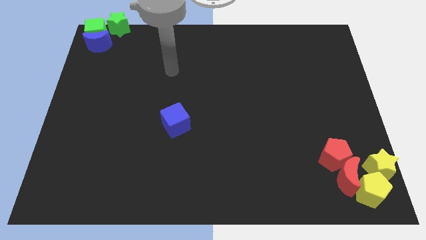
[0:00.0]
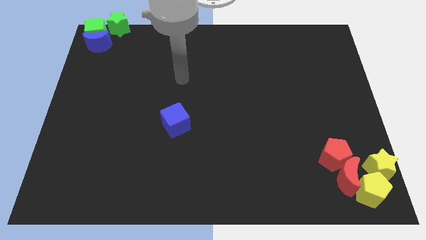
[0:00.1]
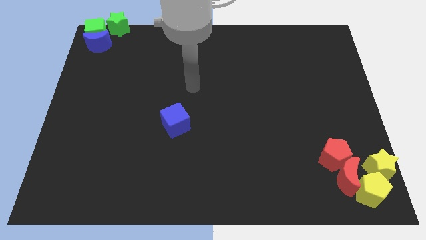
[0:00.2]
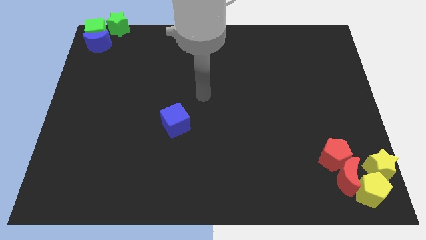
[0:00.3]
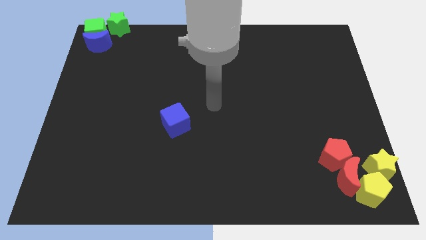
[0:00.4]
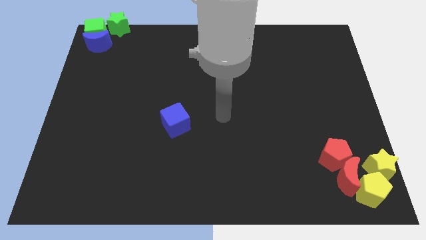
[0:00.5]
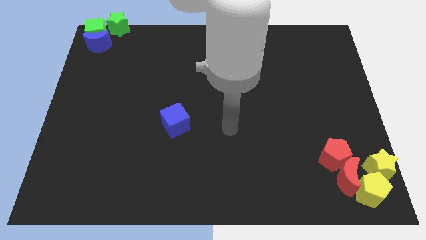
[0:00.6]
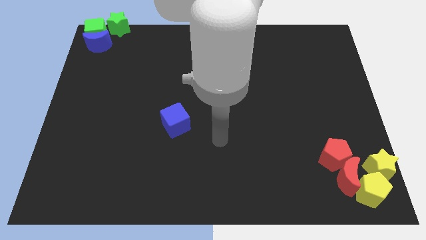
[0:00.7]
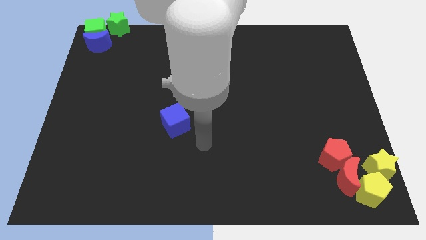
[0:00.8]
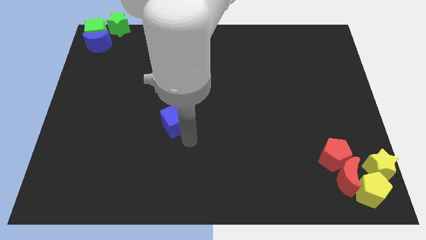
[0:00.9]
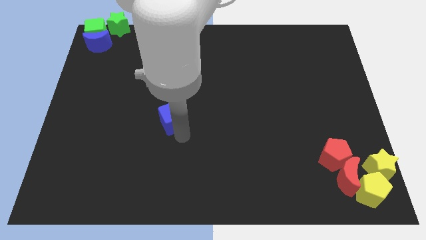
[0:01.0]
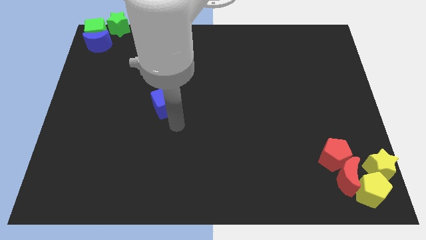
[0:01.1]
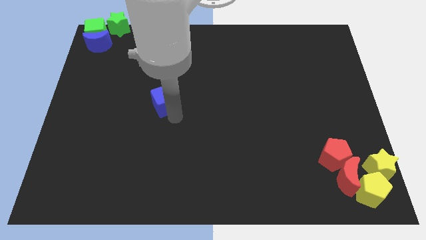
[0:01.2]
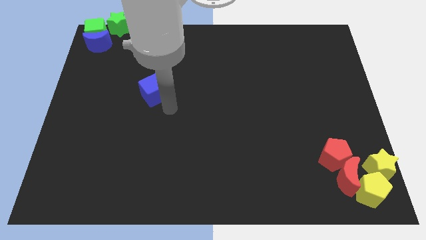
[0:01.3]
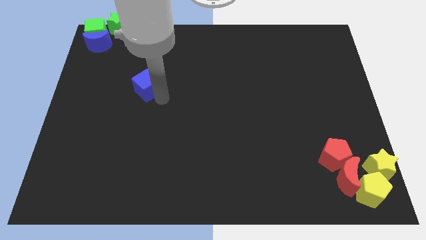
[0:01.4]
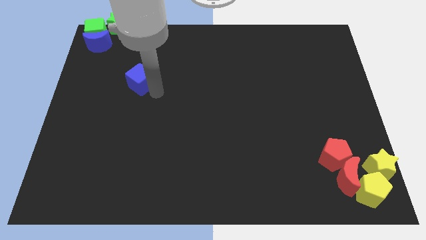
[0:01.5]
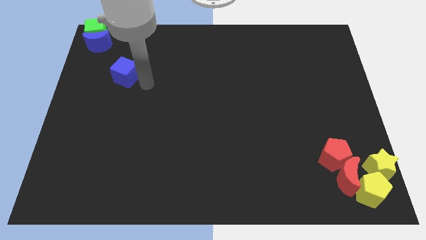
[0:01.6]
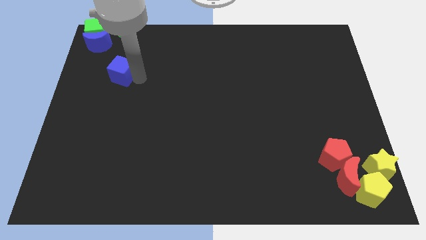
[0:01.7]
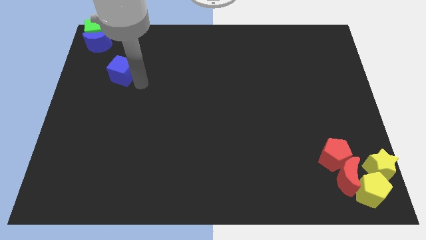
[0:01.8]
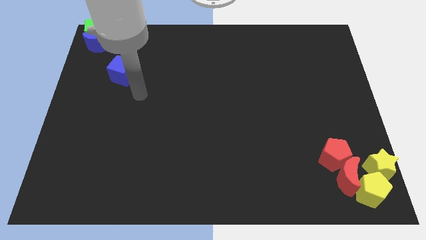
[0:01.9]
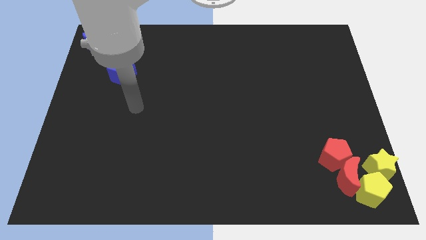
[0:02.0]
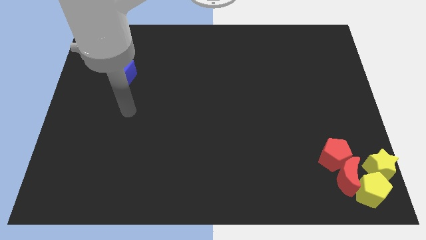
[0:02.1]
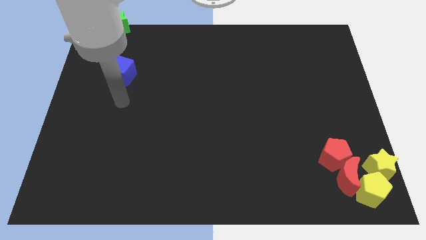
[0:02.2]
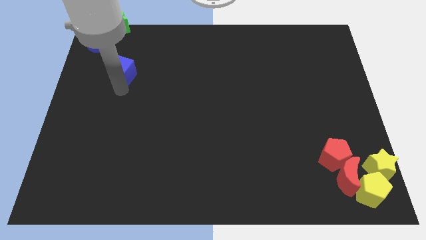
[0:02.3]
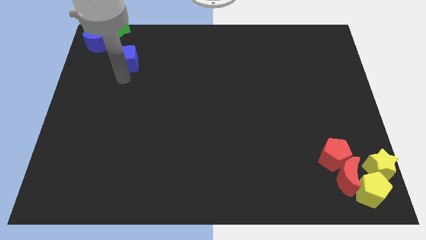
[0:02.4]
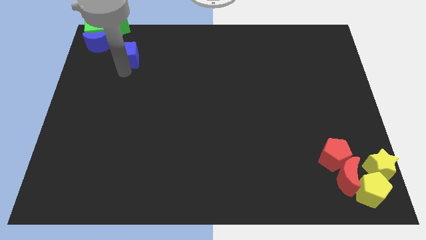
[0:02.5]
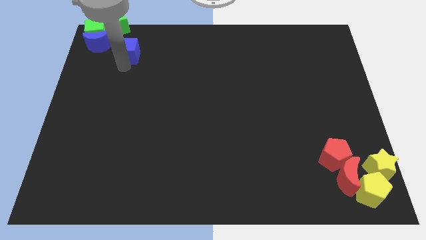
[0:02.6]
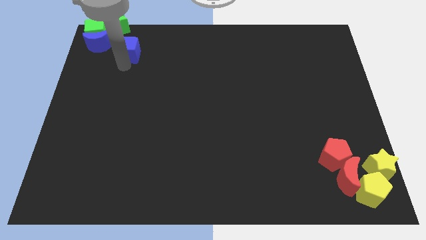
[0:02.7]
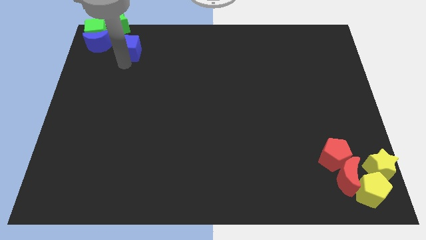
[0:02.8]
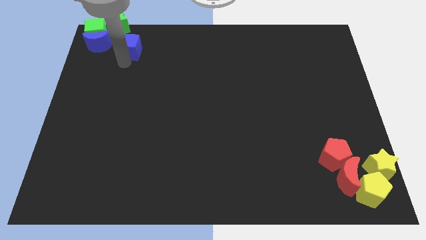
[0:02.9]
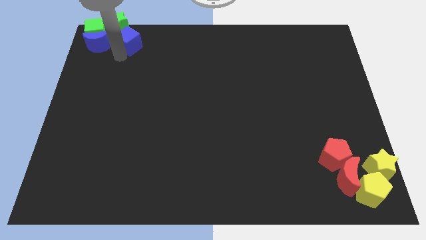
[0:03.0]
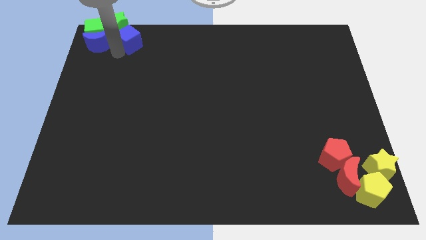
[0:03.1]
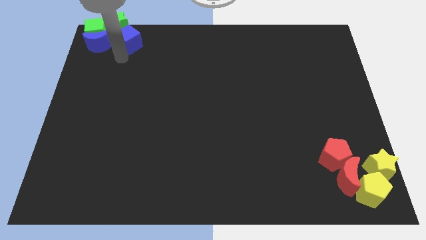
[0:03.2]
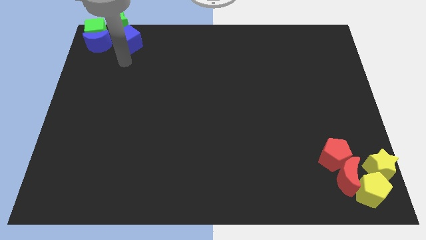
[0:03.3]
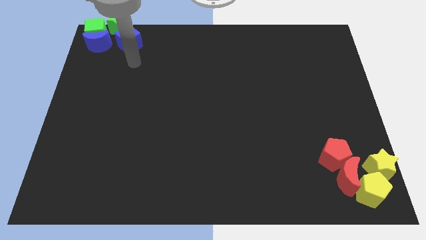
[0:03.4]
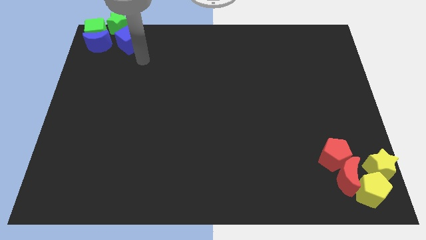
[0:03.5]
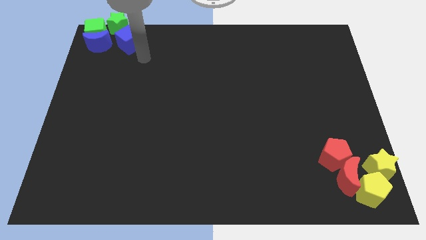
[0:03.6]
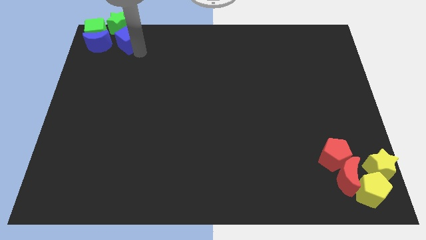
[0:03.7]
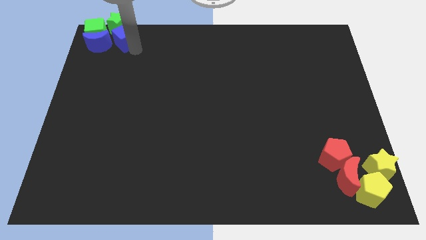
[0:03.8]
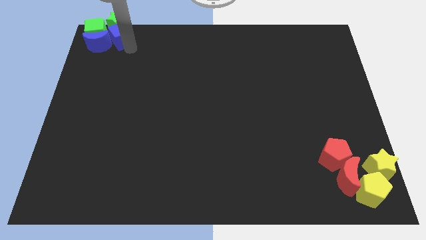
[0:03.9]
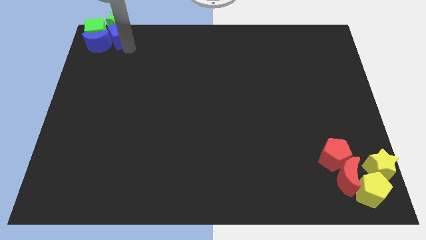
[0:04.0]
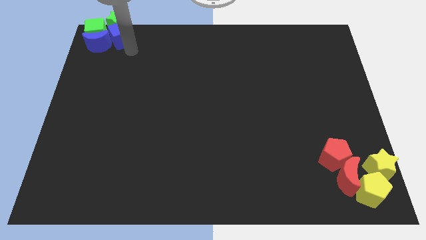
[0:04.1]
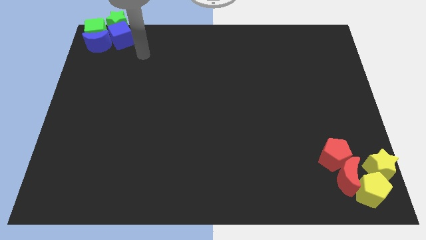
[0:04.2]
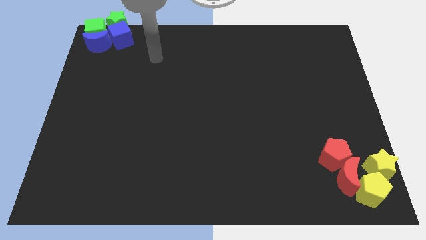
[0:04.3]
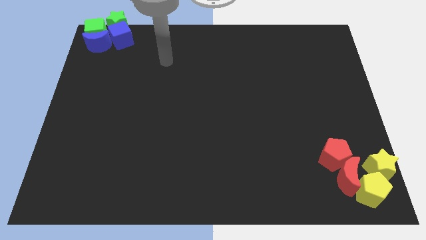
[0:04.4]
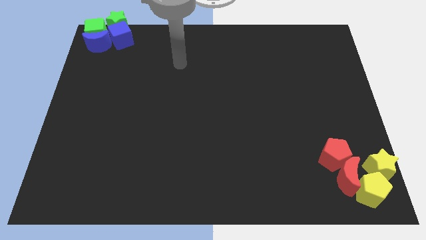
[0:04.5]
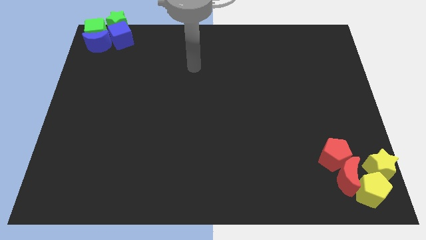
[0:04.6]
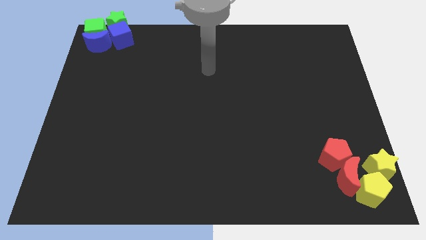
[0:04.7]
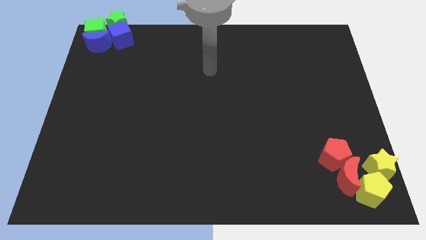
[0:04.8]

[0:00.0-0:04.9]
drag the blue cube towards the group of the blocks

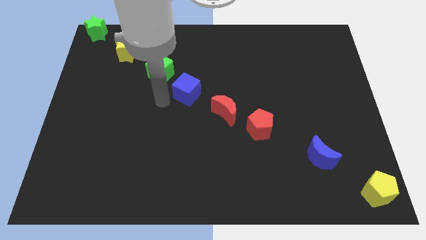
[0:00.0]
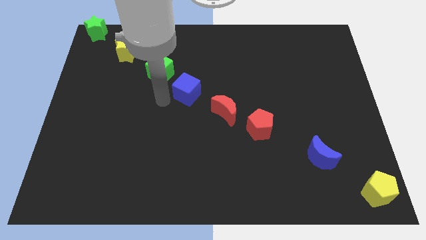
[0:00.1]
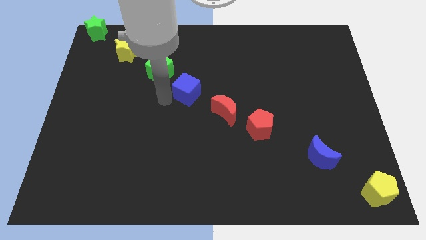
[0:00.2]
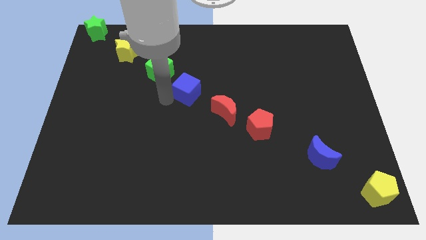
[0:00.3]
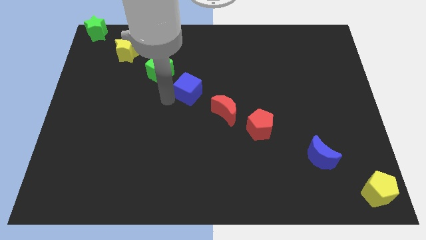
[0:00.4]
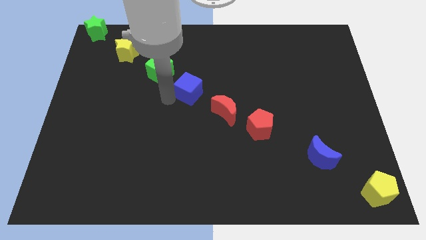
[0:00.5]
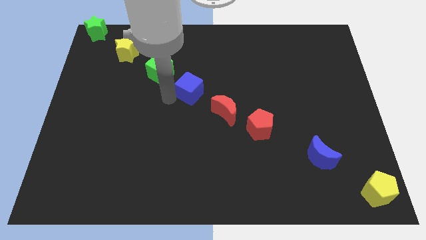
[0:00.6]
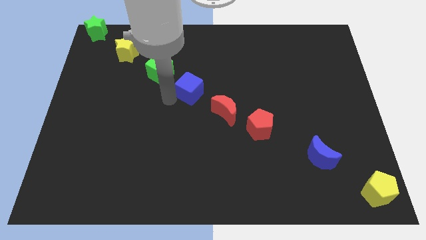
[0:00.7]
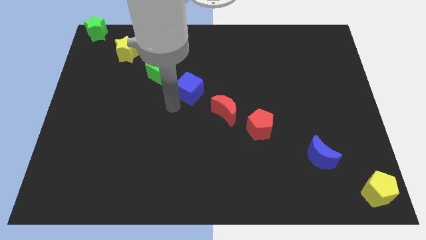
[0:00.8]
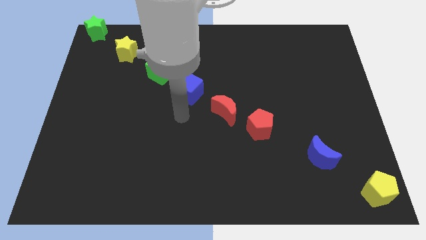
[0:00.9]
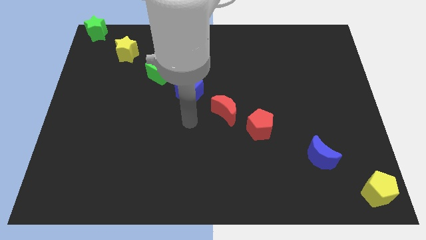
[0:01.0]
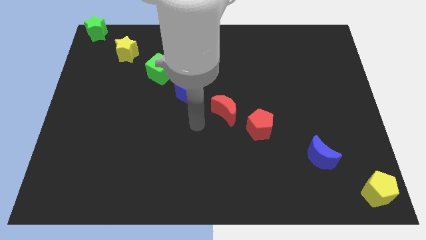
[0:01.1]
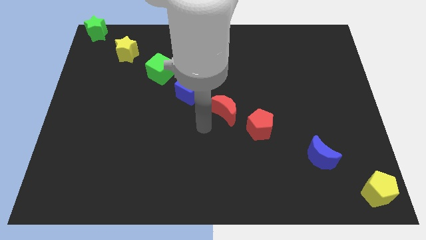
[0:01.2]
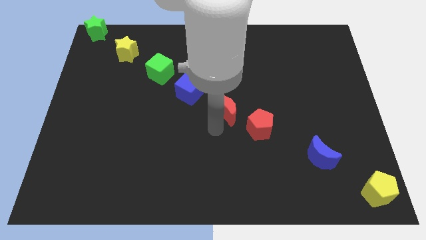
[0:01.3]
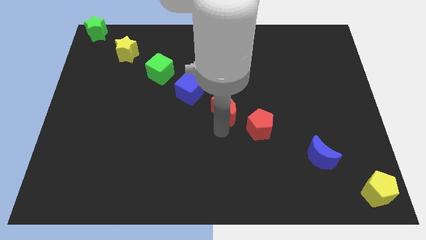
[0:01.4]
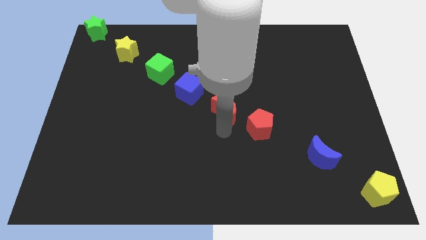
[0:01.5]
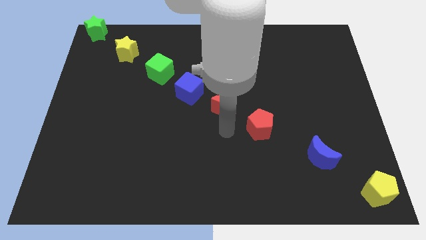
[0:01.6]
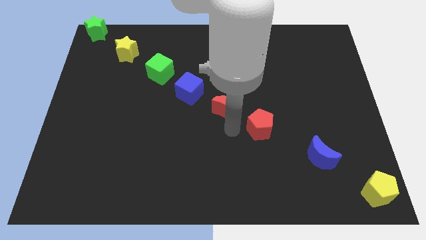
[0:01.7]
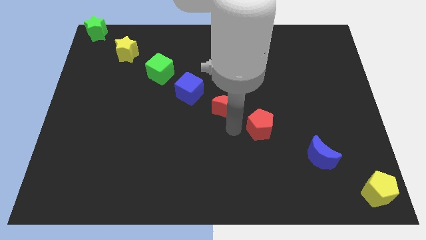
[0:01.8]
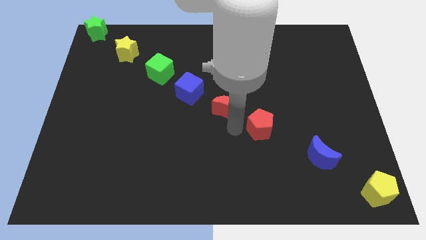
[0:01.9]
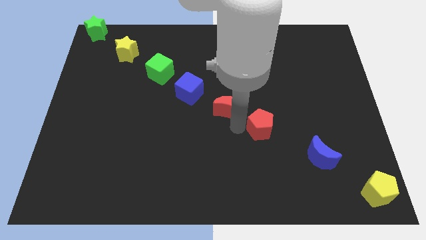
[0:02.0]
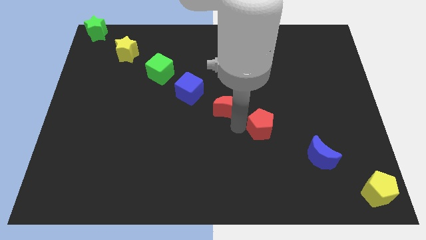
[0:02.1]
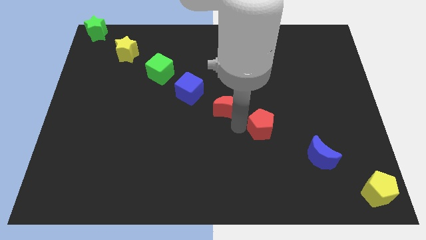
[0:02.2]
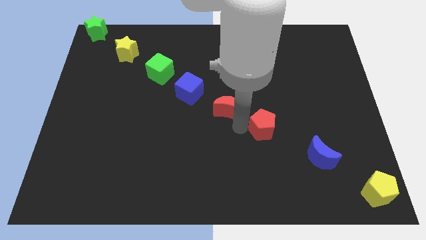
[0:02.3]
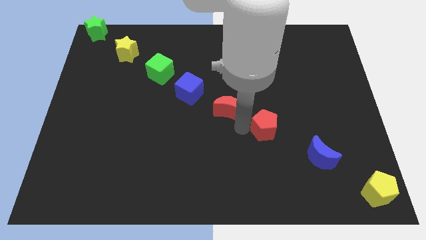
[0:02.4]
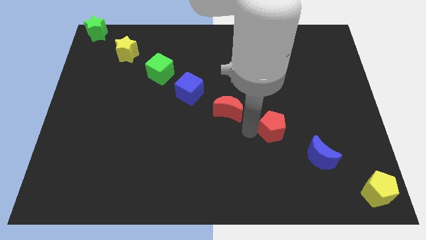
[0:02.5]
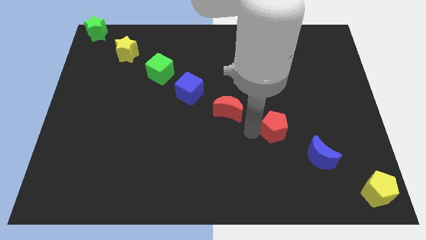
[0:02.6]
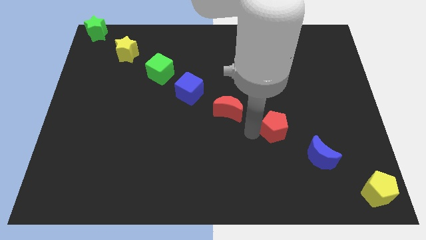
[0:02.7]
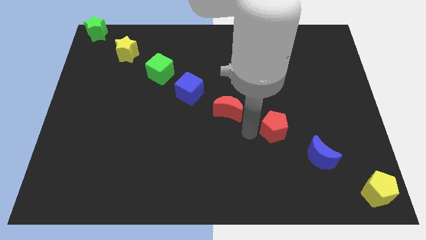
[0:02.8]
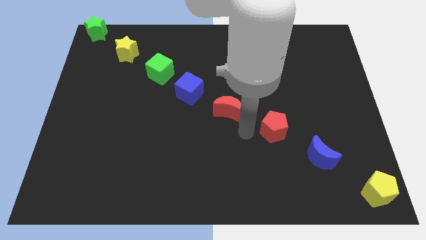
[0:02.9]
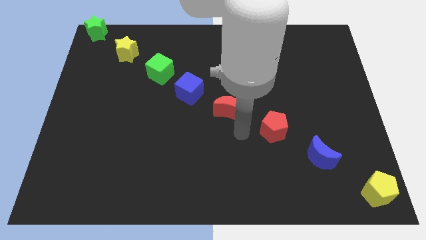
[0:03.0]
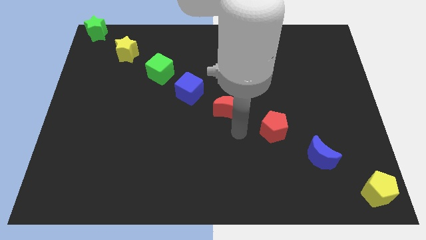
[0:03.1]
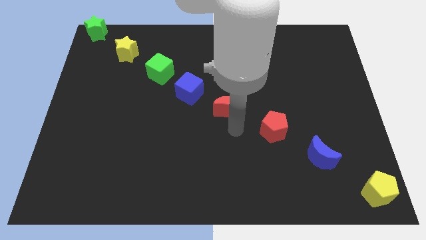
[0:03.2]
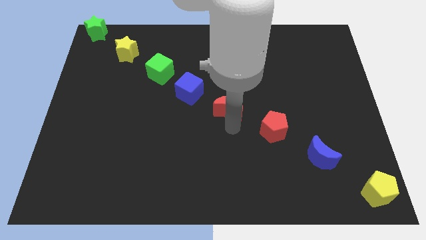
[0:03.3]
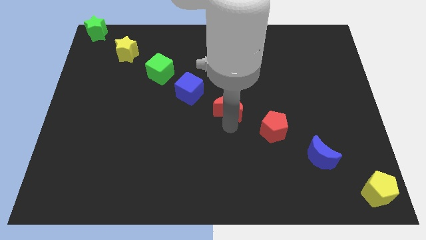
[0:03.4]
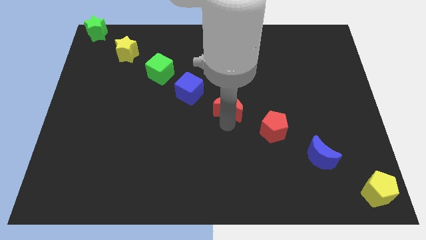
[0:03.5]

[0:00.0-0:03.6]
move the blue cube red crescent red pentagon slightly towards top side

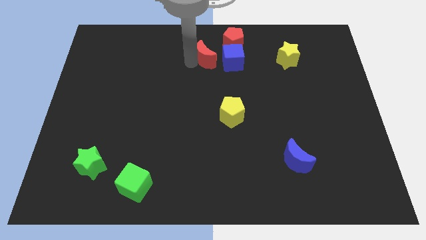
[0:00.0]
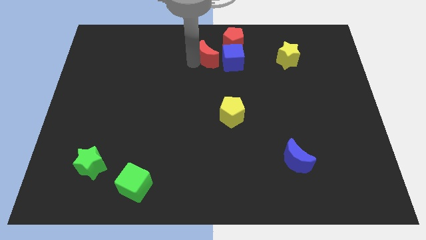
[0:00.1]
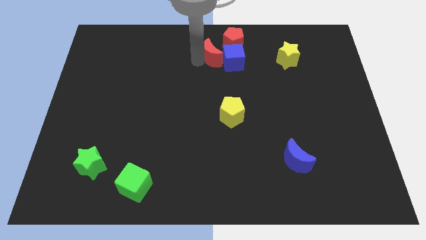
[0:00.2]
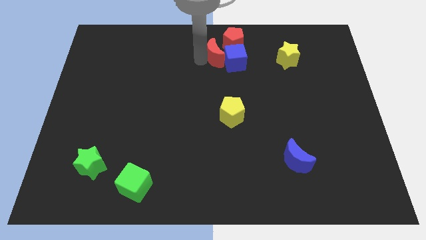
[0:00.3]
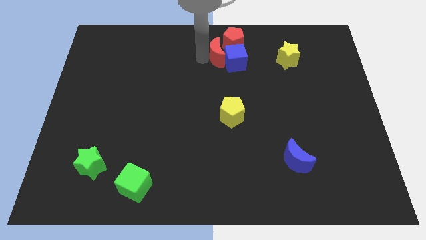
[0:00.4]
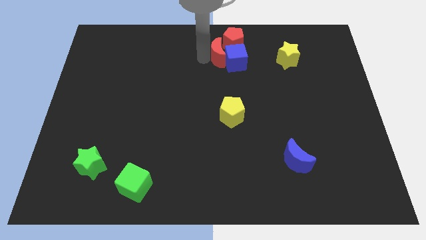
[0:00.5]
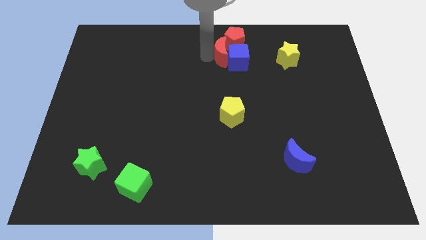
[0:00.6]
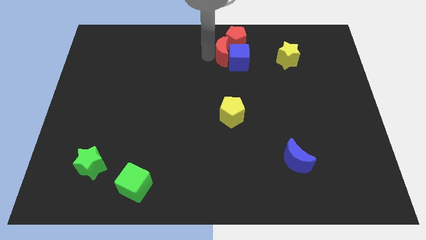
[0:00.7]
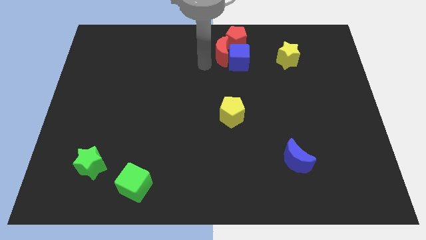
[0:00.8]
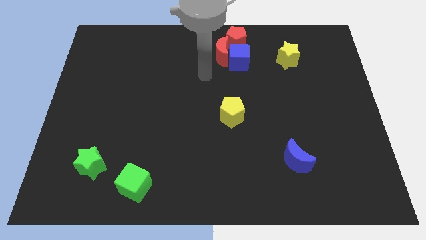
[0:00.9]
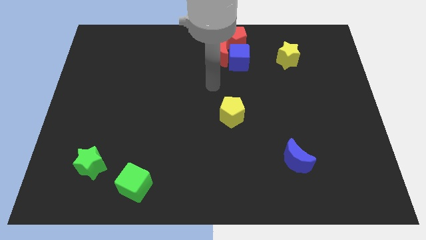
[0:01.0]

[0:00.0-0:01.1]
push red moon into the blue cube
